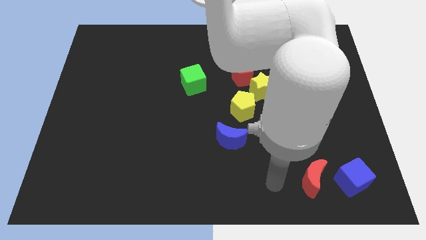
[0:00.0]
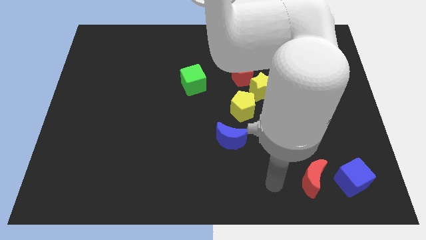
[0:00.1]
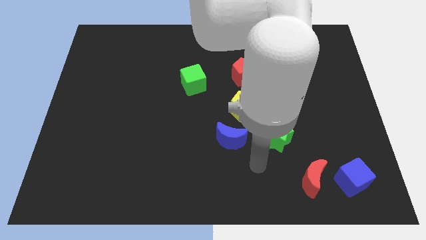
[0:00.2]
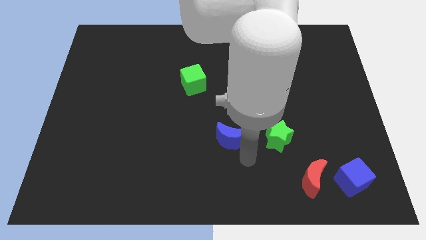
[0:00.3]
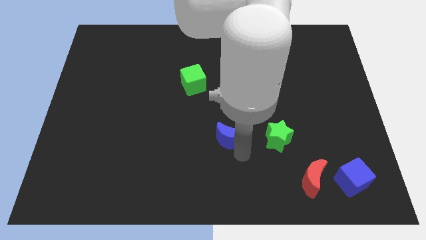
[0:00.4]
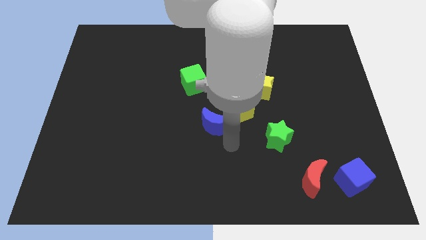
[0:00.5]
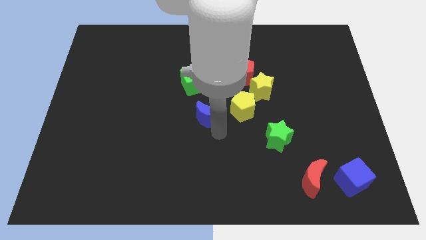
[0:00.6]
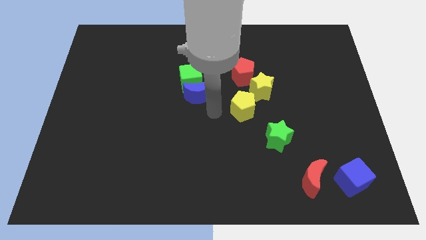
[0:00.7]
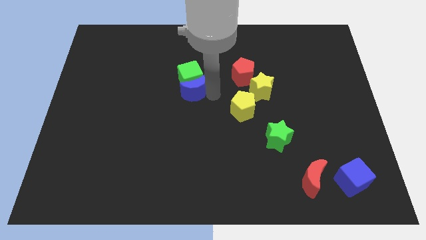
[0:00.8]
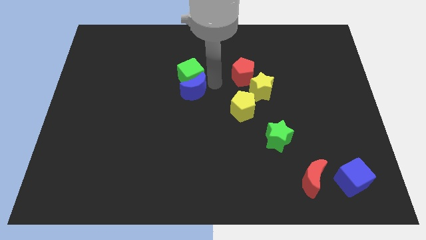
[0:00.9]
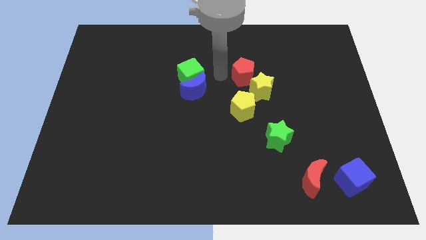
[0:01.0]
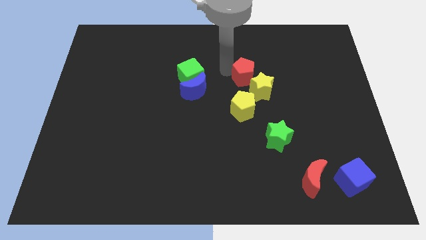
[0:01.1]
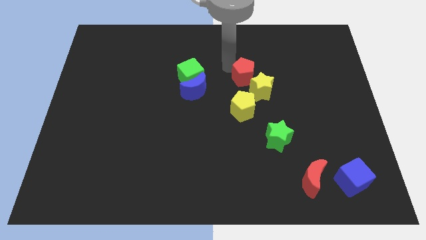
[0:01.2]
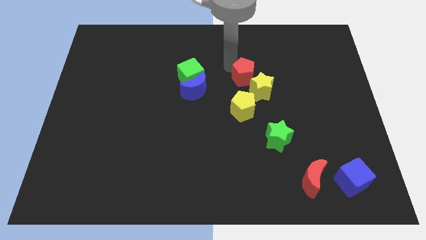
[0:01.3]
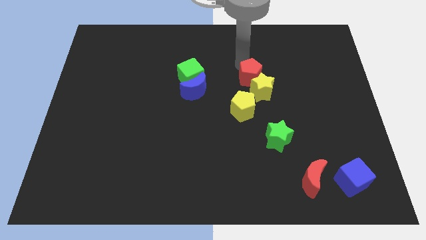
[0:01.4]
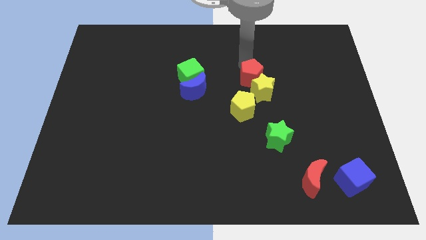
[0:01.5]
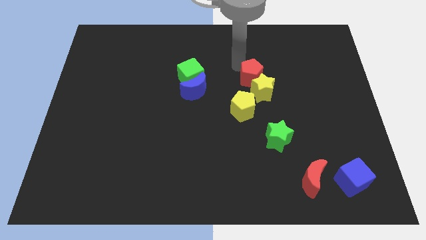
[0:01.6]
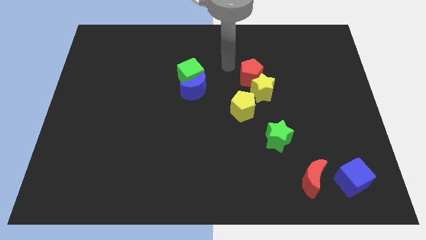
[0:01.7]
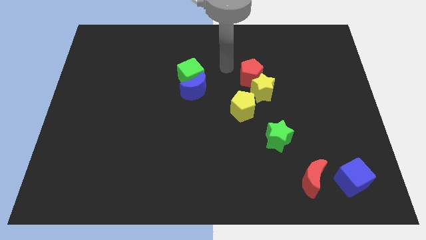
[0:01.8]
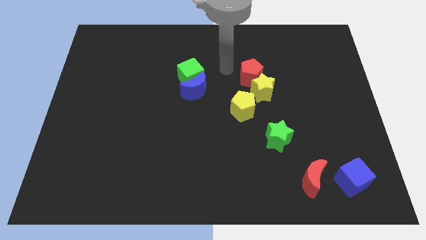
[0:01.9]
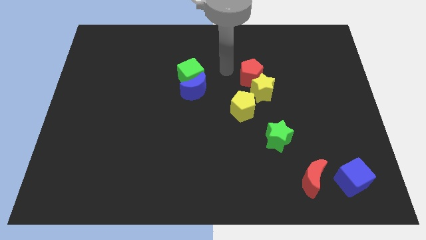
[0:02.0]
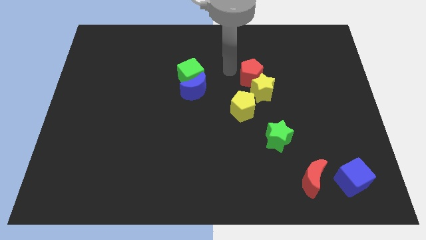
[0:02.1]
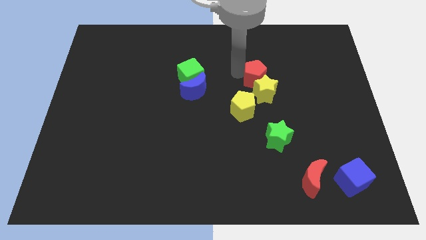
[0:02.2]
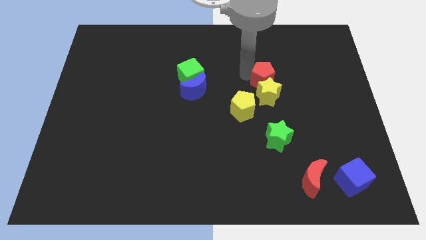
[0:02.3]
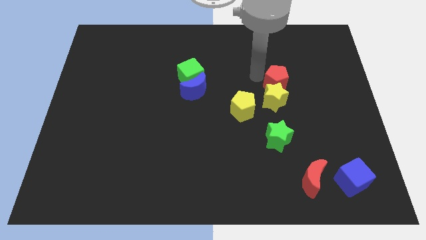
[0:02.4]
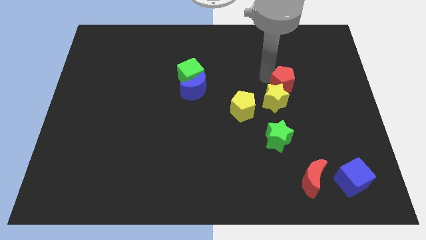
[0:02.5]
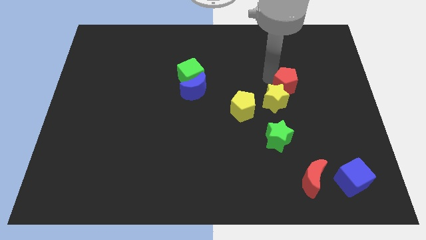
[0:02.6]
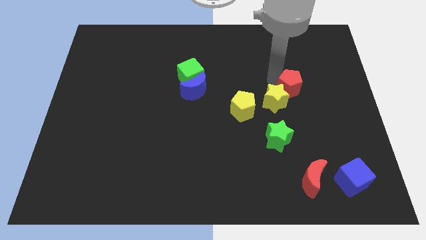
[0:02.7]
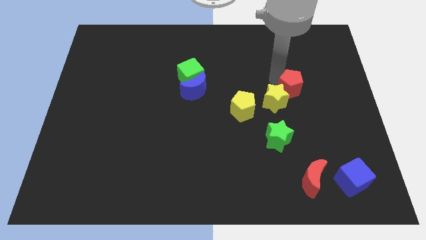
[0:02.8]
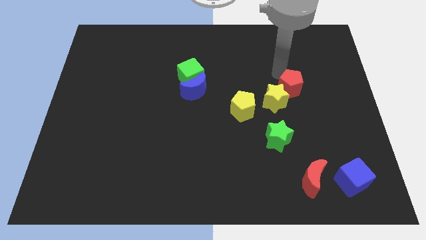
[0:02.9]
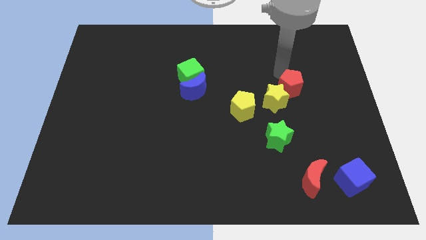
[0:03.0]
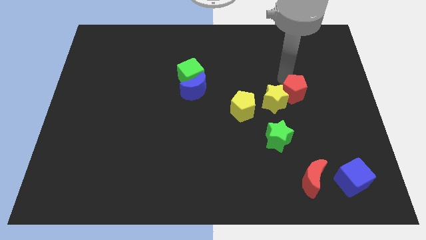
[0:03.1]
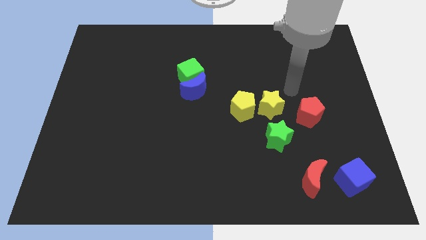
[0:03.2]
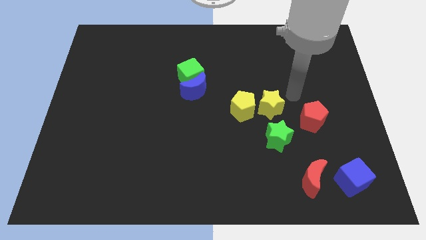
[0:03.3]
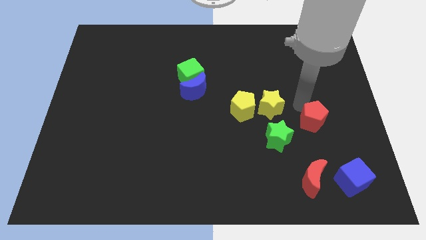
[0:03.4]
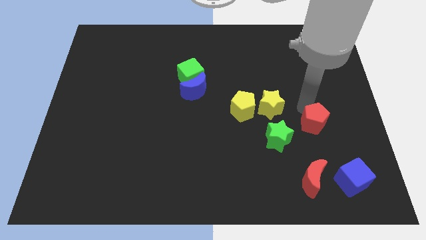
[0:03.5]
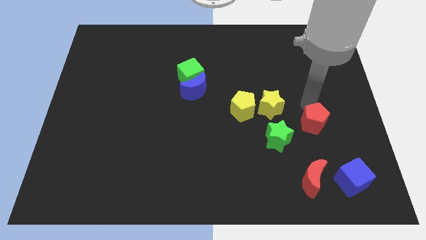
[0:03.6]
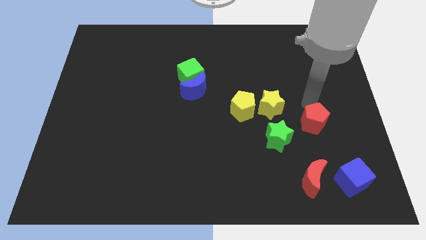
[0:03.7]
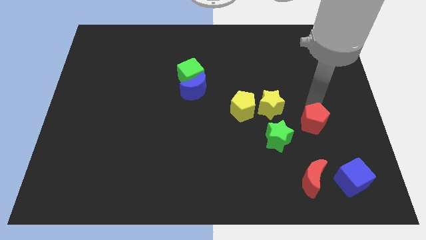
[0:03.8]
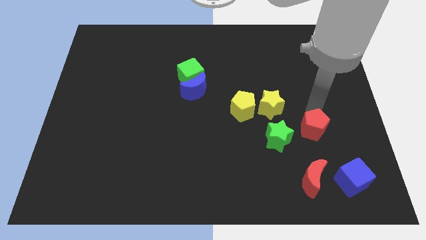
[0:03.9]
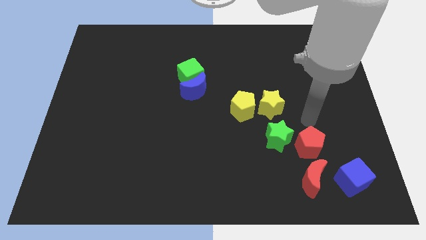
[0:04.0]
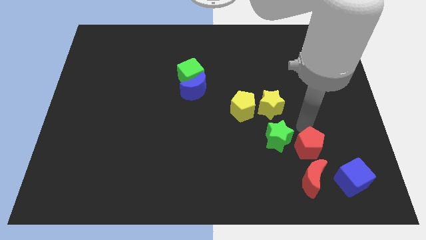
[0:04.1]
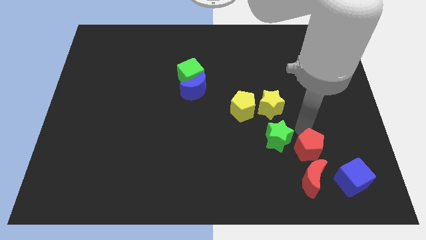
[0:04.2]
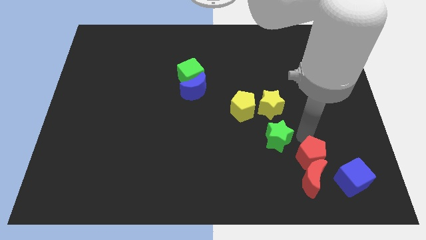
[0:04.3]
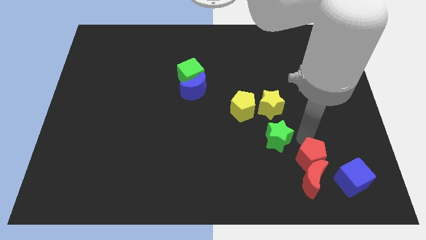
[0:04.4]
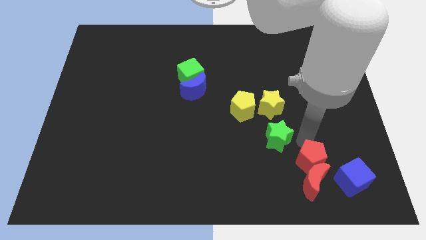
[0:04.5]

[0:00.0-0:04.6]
move the red pentagon to the red moon

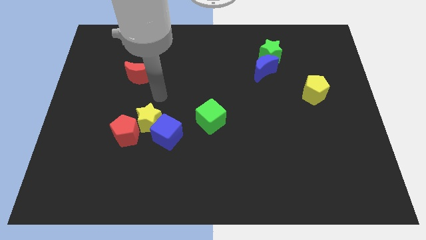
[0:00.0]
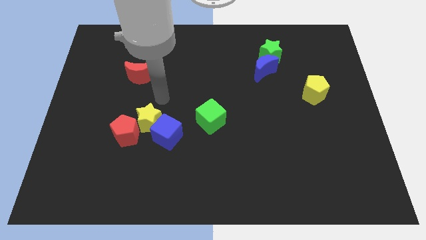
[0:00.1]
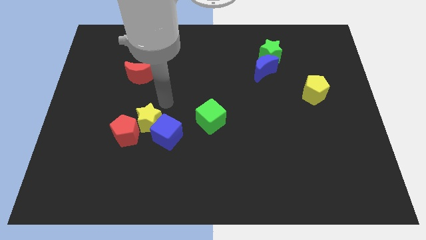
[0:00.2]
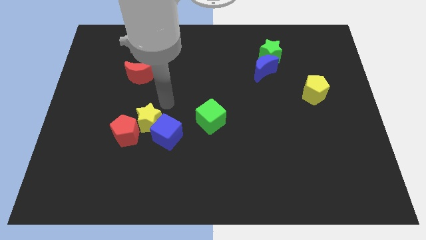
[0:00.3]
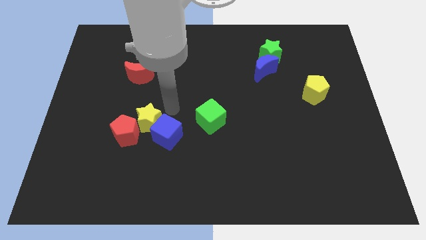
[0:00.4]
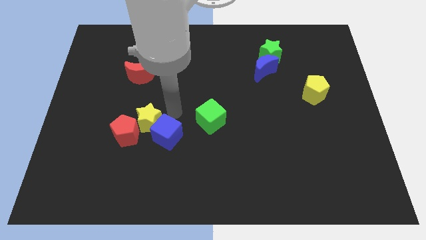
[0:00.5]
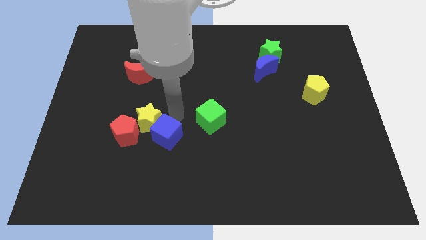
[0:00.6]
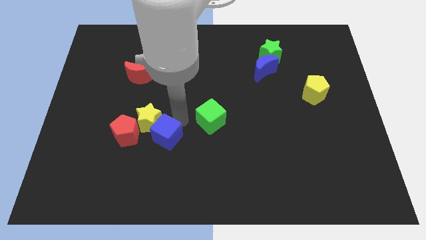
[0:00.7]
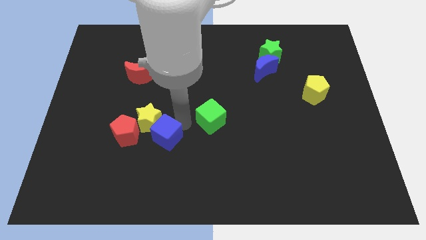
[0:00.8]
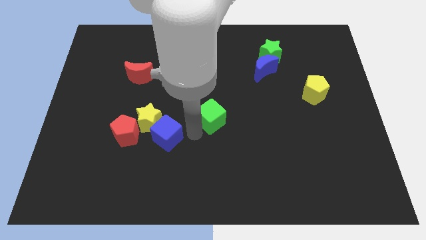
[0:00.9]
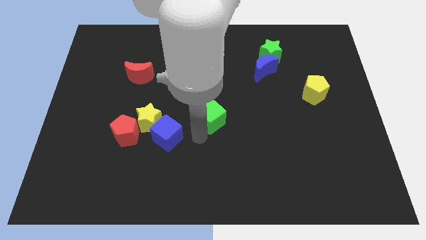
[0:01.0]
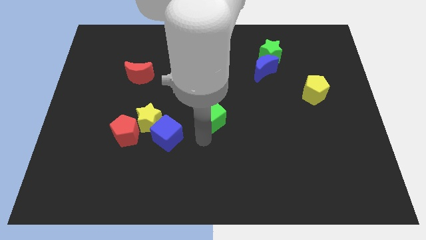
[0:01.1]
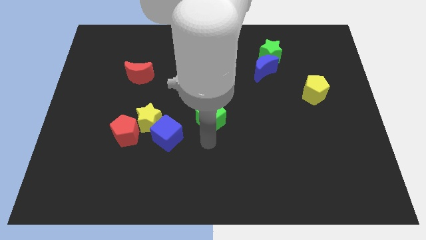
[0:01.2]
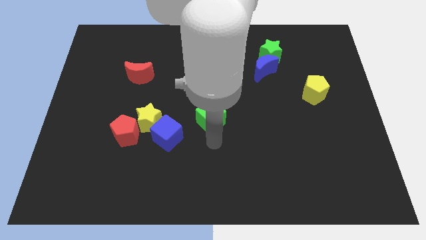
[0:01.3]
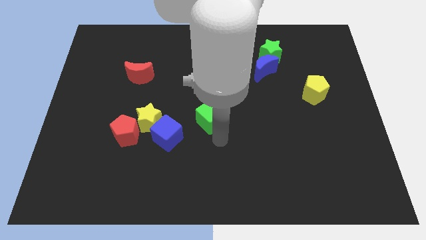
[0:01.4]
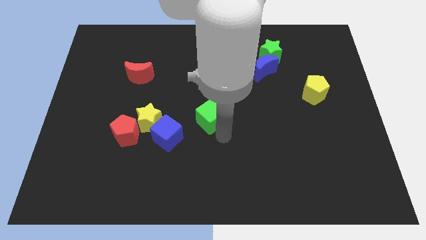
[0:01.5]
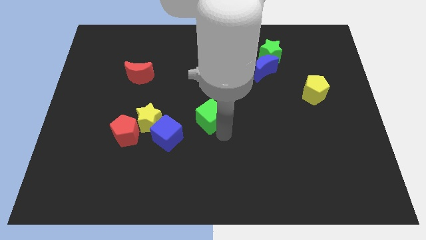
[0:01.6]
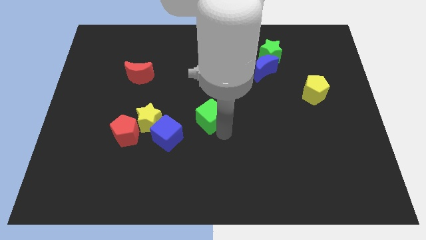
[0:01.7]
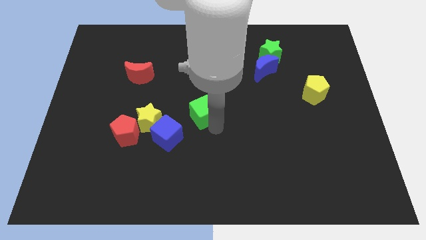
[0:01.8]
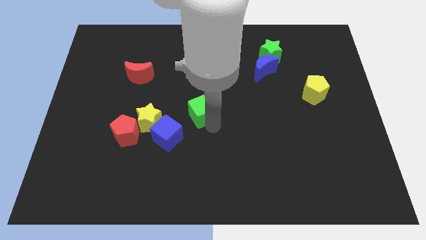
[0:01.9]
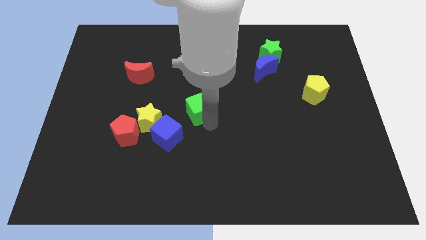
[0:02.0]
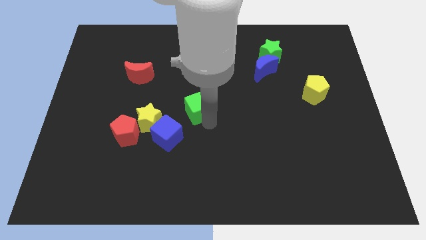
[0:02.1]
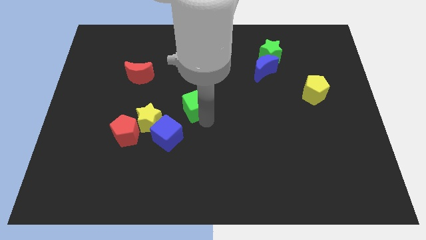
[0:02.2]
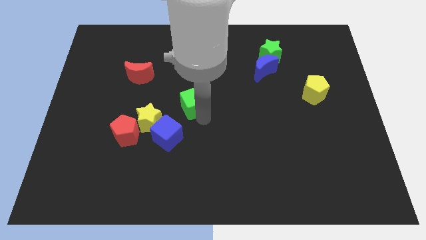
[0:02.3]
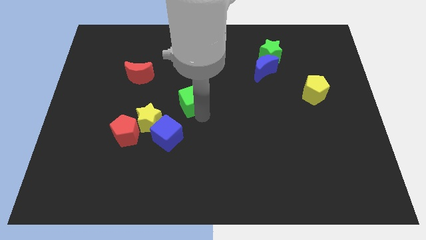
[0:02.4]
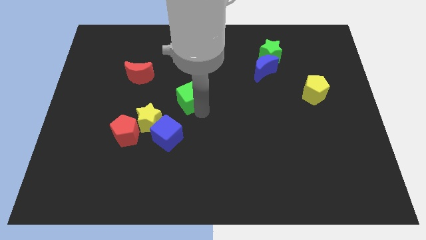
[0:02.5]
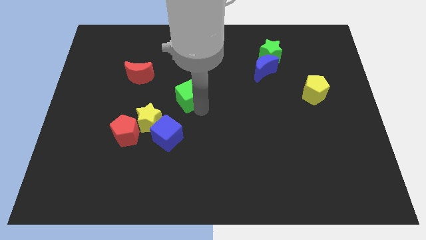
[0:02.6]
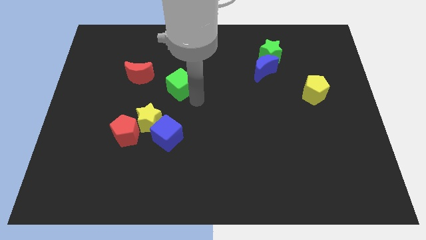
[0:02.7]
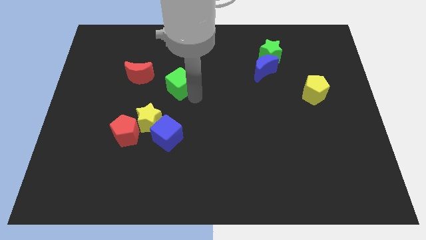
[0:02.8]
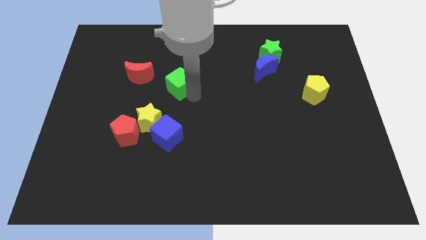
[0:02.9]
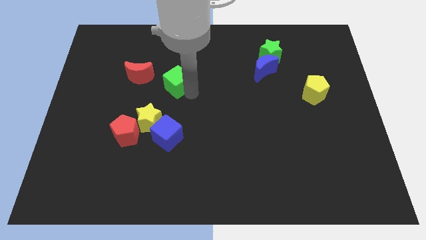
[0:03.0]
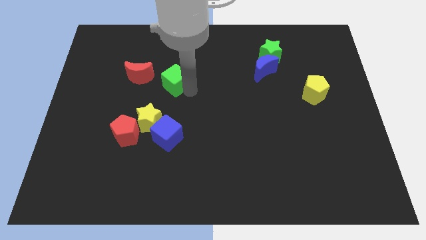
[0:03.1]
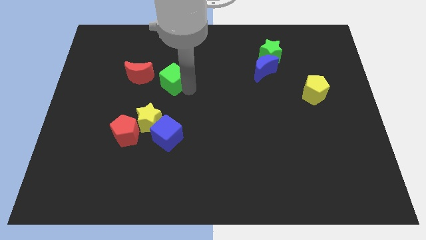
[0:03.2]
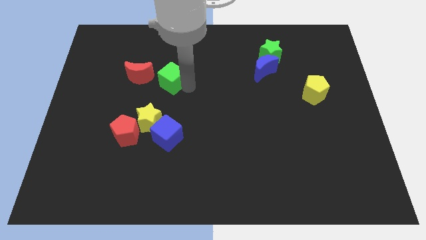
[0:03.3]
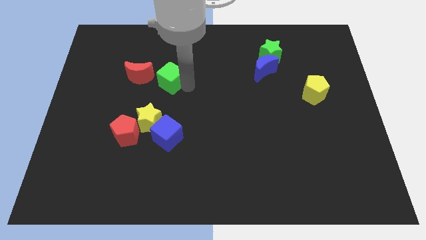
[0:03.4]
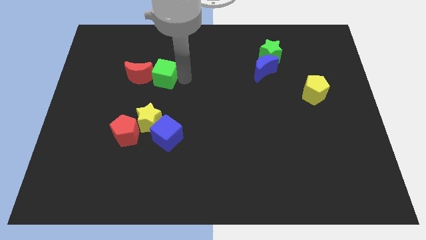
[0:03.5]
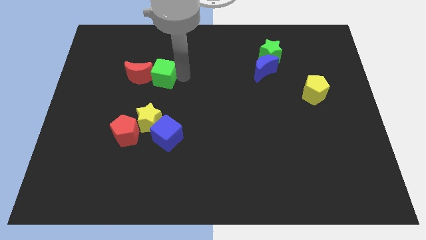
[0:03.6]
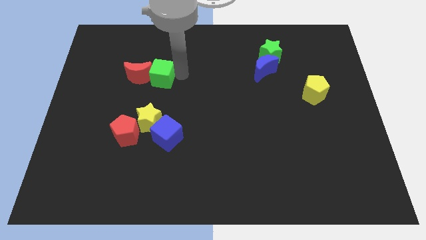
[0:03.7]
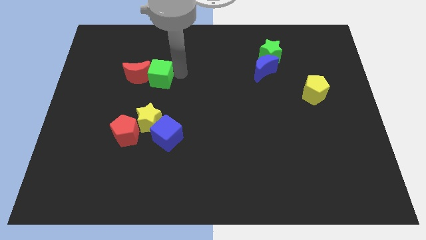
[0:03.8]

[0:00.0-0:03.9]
slide the green cube close to the red moon
